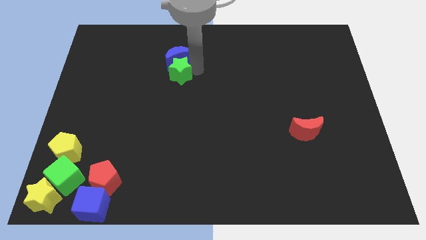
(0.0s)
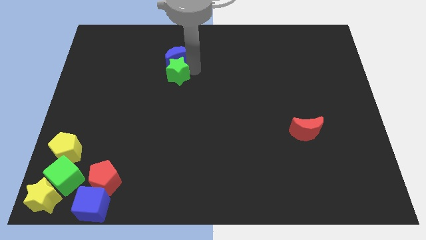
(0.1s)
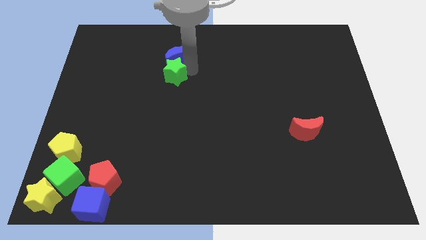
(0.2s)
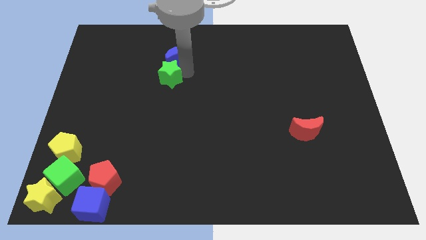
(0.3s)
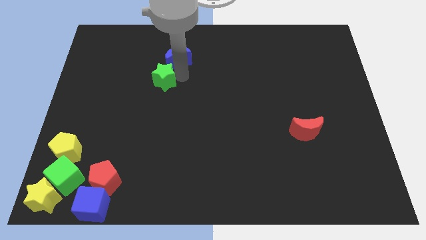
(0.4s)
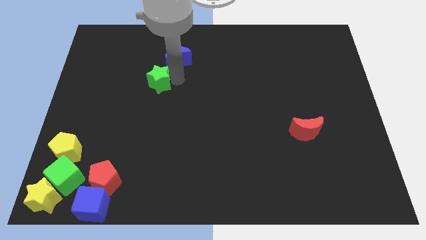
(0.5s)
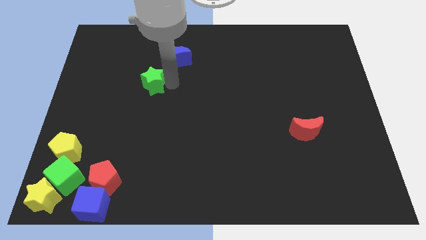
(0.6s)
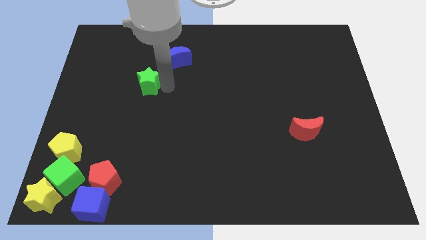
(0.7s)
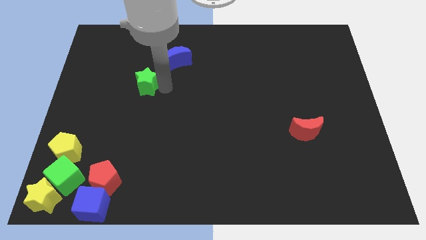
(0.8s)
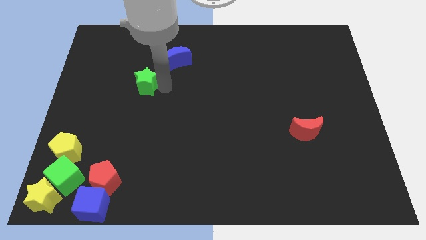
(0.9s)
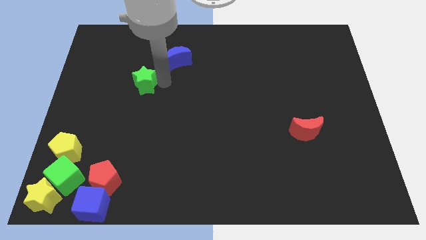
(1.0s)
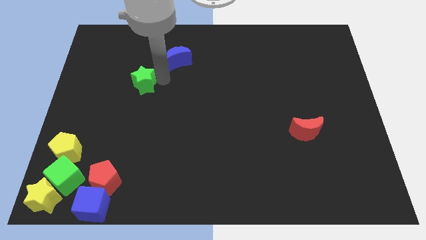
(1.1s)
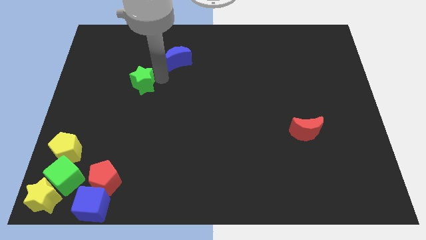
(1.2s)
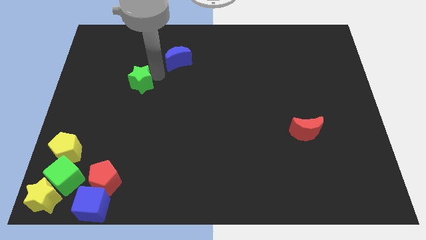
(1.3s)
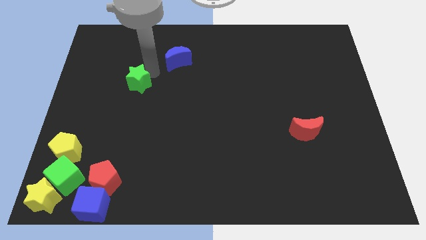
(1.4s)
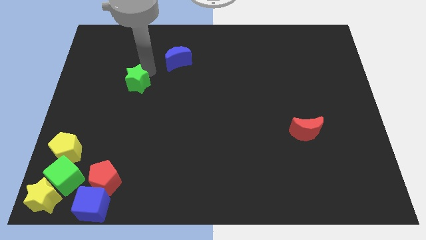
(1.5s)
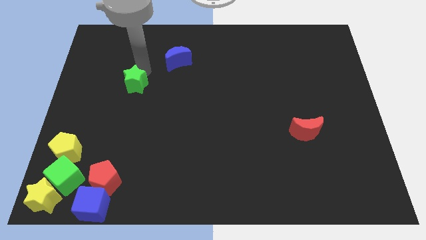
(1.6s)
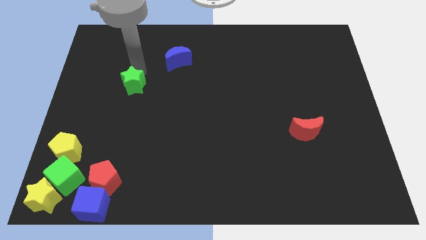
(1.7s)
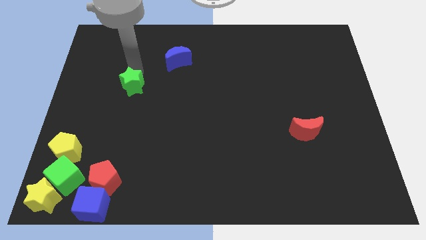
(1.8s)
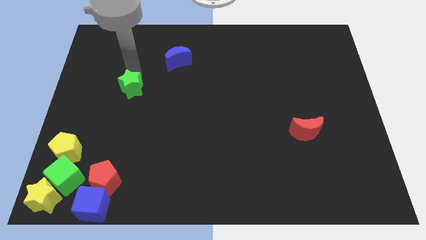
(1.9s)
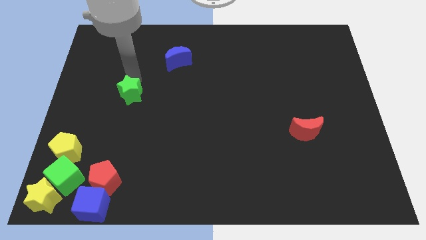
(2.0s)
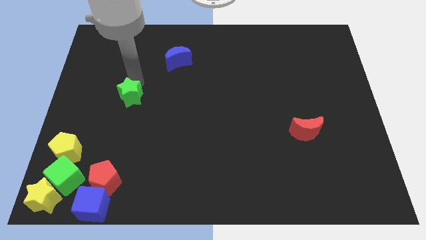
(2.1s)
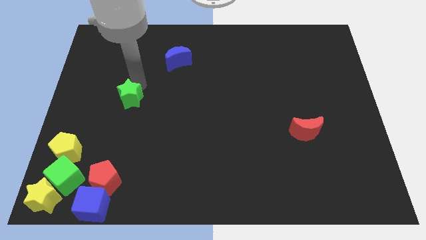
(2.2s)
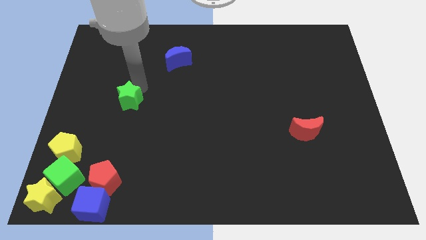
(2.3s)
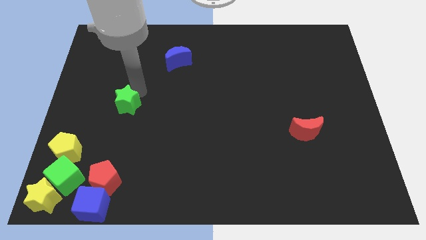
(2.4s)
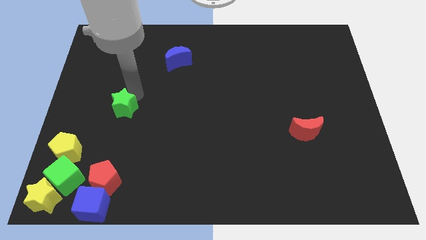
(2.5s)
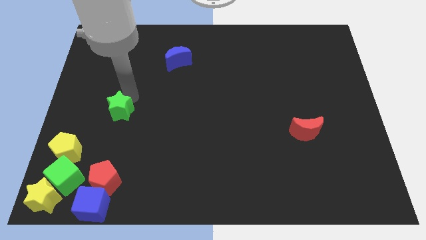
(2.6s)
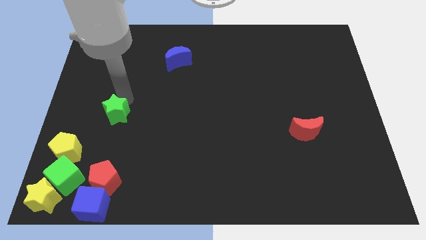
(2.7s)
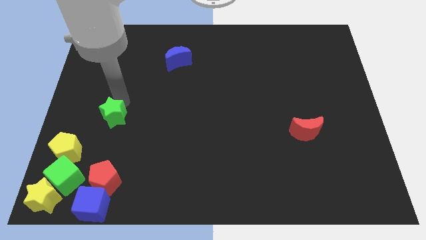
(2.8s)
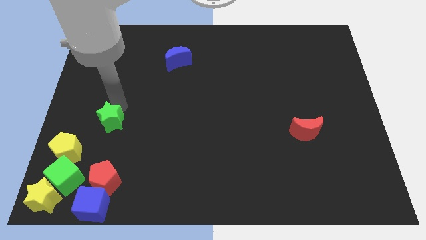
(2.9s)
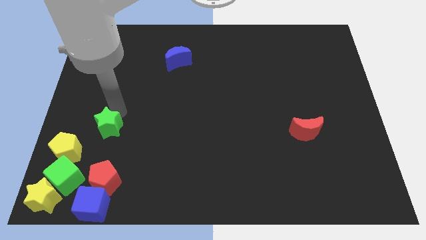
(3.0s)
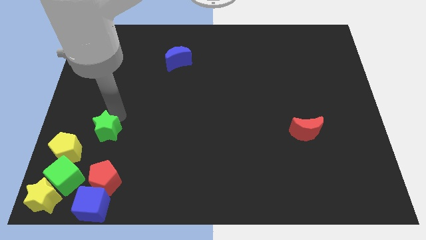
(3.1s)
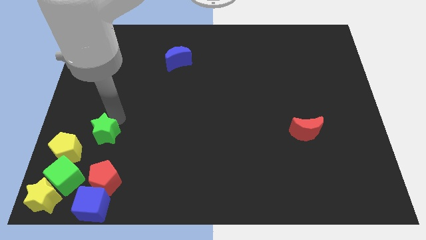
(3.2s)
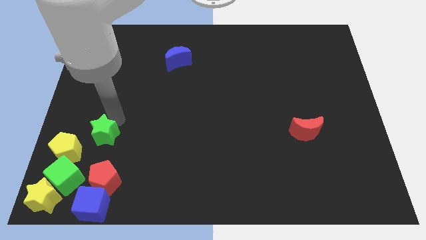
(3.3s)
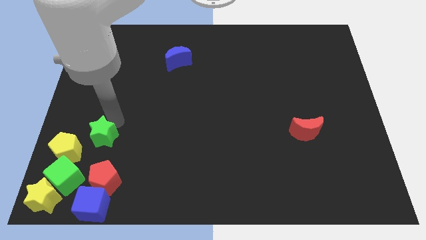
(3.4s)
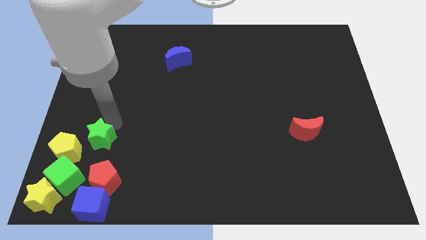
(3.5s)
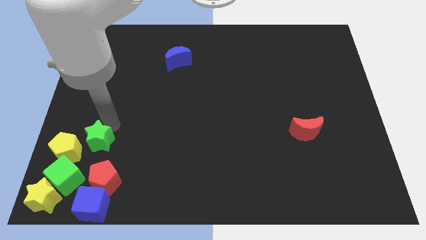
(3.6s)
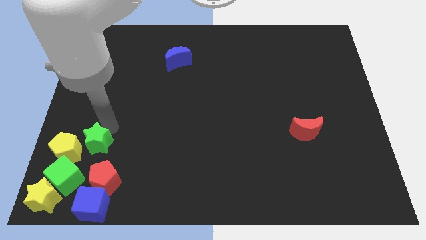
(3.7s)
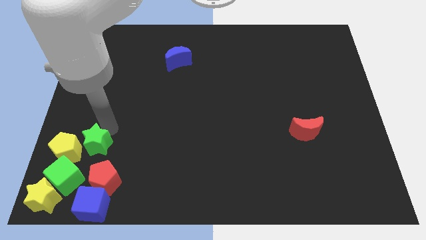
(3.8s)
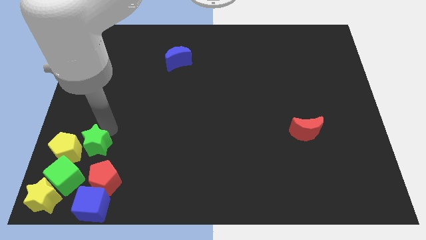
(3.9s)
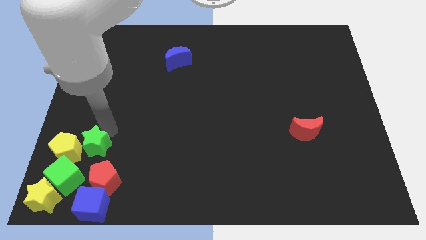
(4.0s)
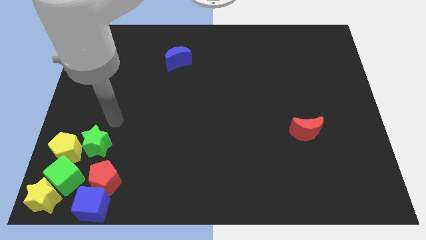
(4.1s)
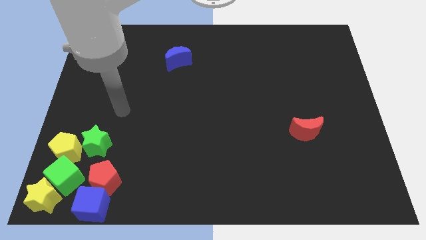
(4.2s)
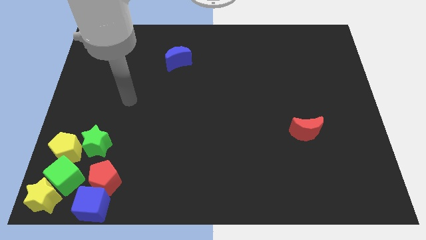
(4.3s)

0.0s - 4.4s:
place the green star to the right side of yellow pentagon

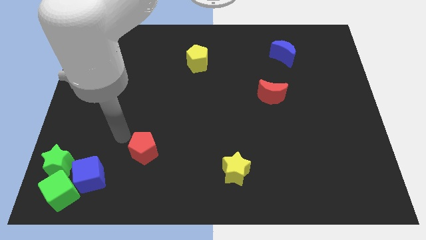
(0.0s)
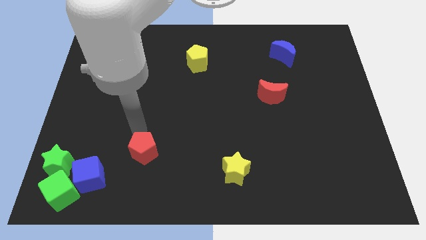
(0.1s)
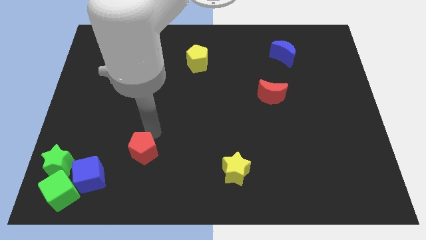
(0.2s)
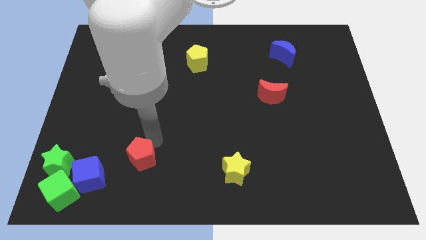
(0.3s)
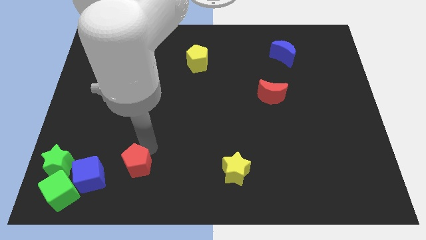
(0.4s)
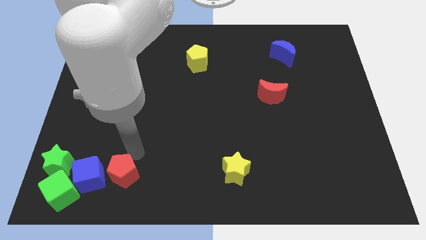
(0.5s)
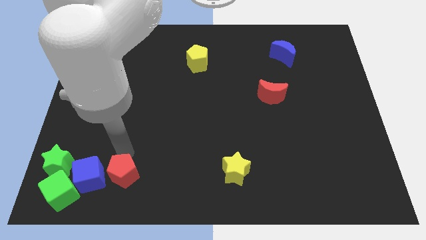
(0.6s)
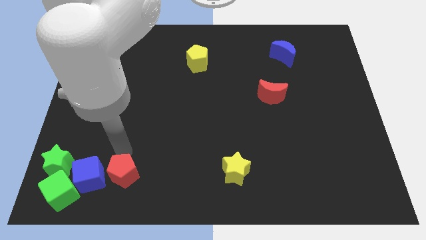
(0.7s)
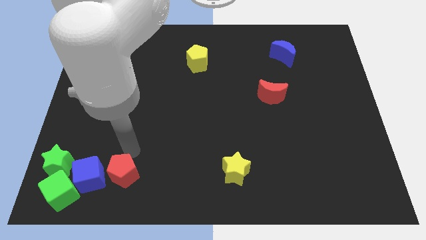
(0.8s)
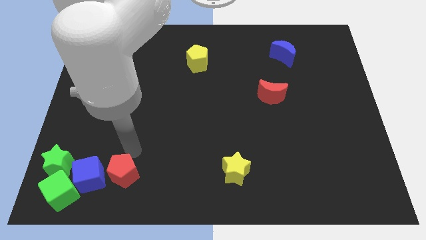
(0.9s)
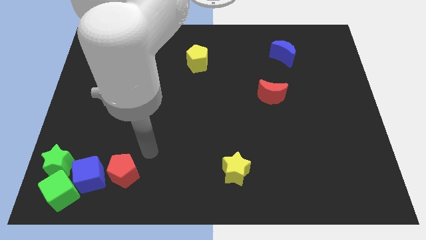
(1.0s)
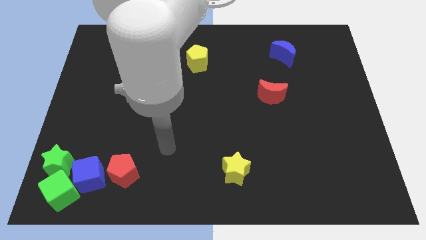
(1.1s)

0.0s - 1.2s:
place the red pentagon to the right of the blue cube

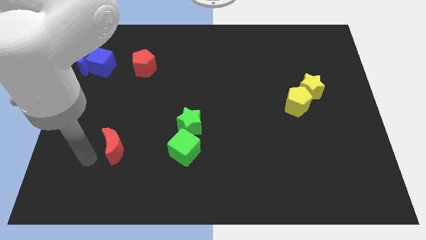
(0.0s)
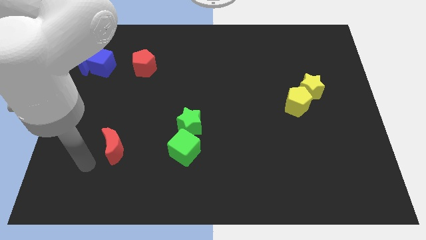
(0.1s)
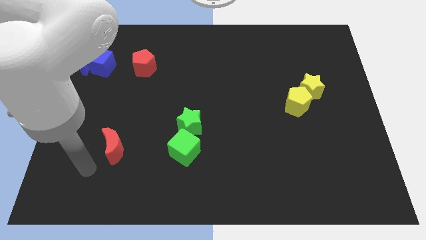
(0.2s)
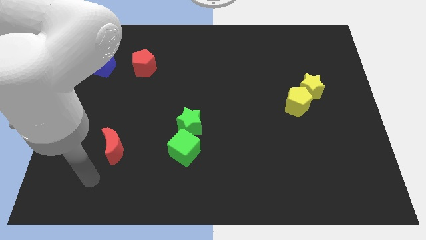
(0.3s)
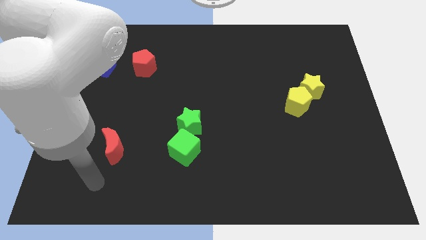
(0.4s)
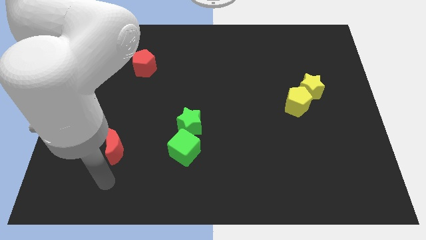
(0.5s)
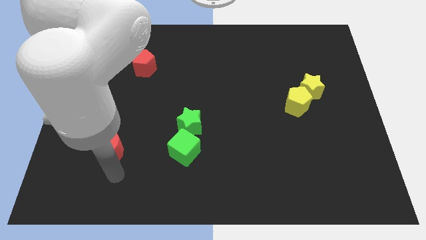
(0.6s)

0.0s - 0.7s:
place the arm near the red moon

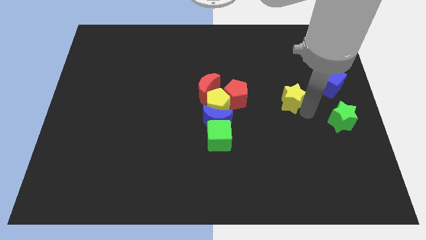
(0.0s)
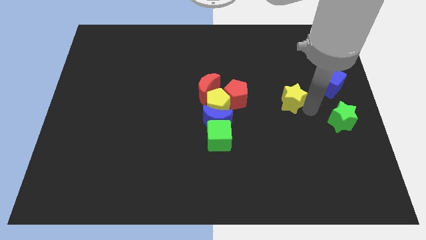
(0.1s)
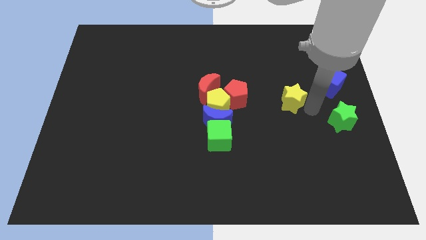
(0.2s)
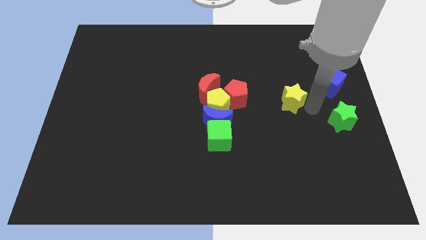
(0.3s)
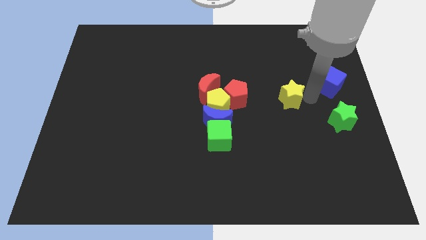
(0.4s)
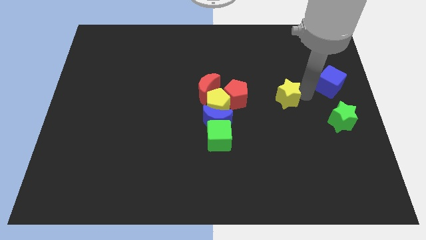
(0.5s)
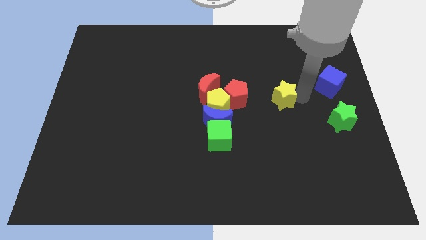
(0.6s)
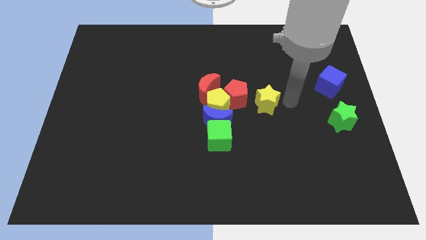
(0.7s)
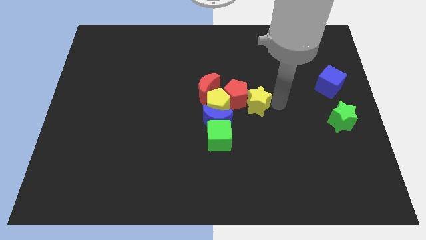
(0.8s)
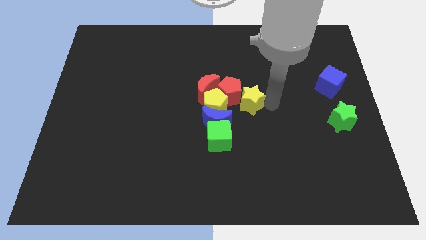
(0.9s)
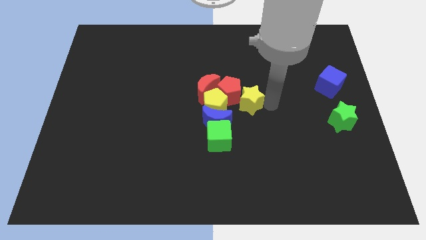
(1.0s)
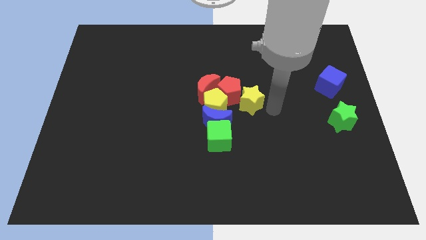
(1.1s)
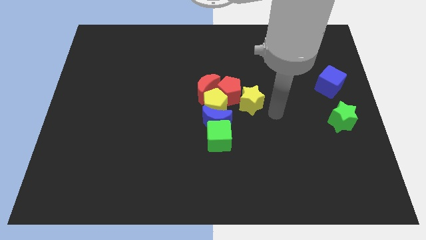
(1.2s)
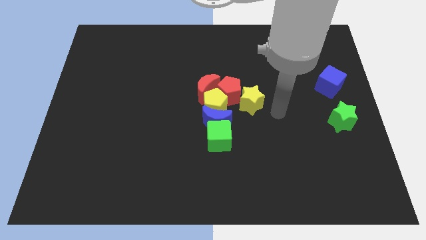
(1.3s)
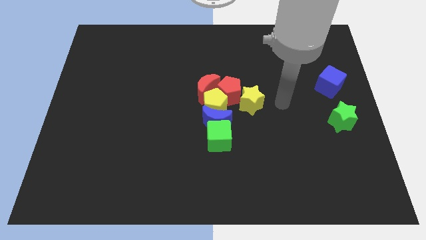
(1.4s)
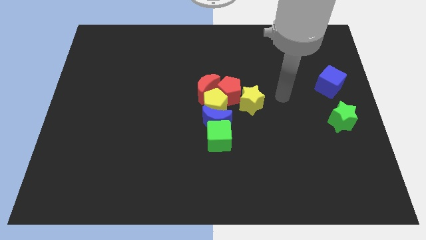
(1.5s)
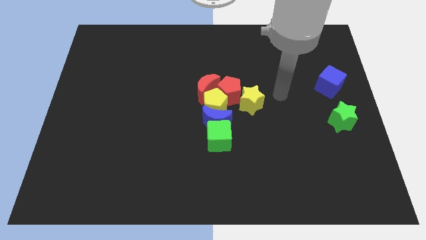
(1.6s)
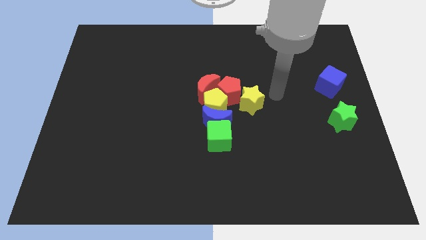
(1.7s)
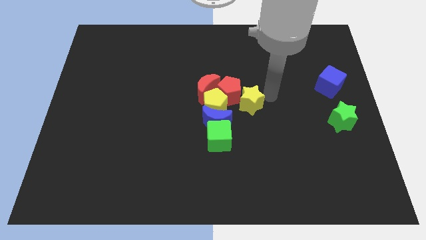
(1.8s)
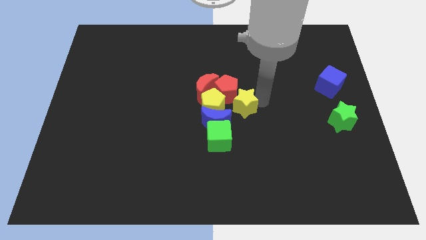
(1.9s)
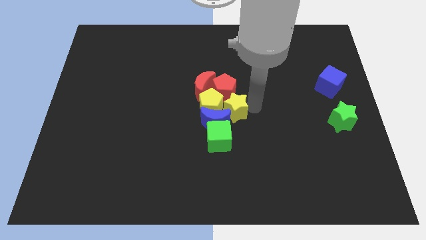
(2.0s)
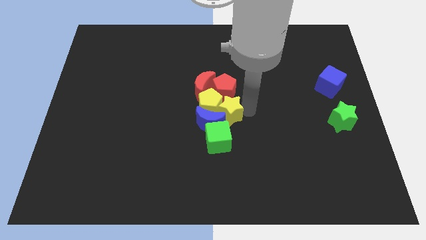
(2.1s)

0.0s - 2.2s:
move the yellow star into the group of objects

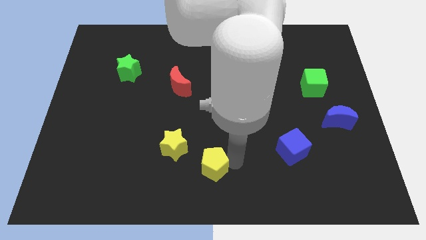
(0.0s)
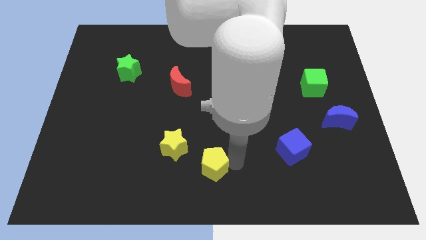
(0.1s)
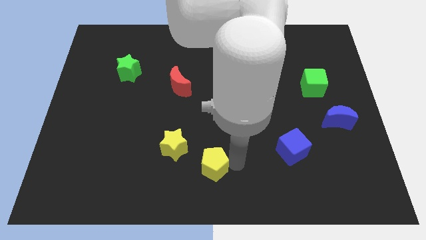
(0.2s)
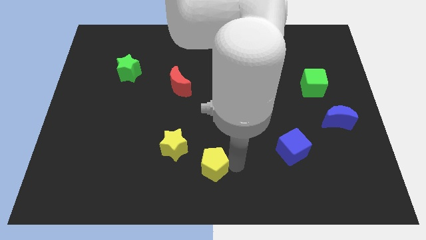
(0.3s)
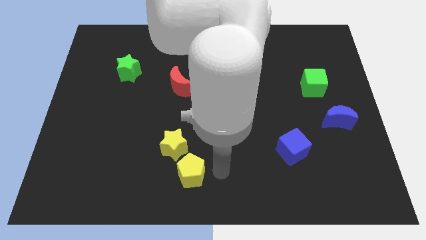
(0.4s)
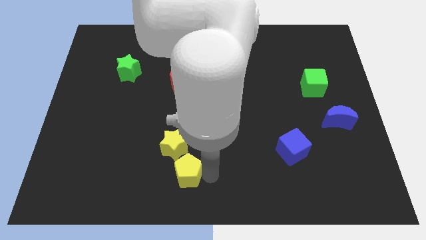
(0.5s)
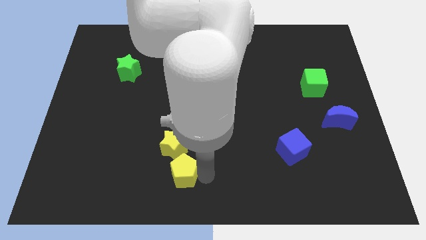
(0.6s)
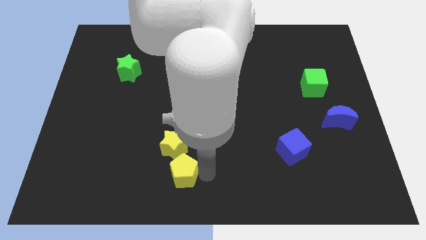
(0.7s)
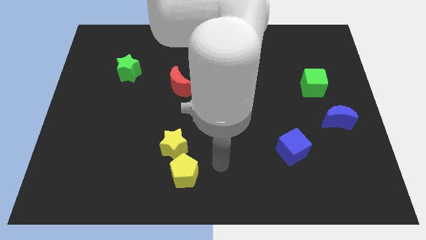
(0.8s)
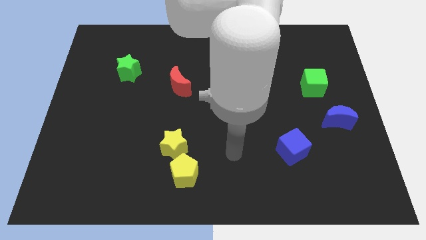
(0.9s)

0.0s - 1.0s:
move the yellow pentagon close to the yellow star
